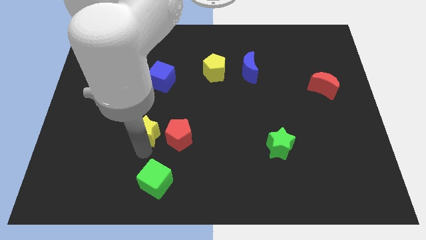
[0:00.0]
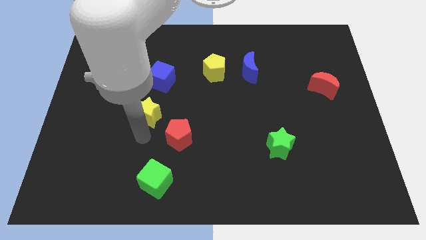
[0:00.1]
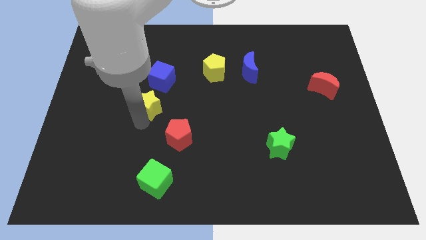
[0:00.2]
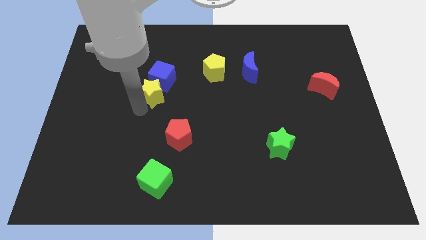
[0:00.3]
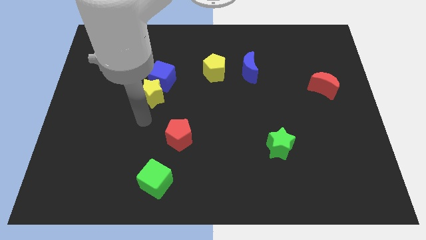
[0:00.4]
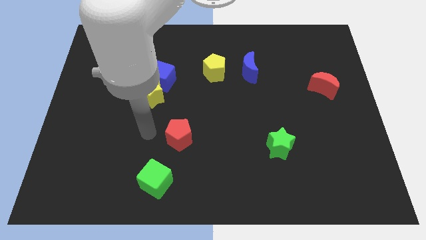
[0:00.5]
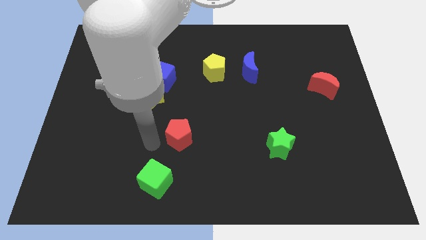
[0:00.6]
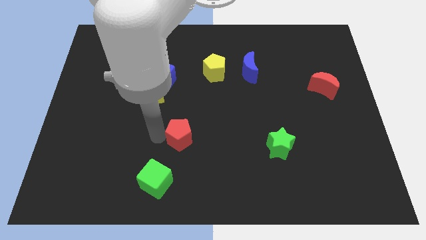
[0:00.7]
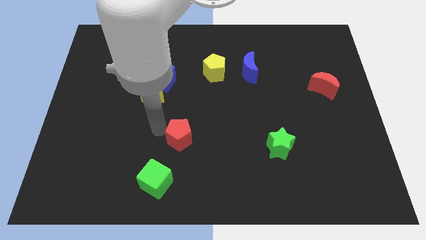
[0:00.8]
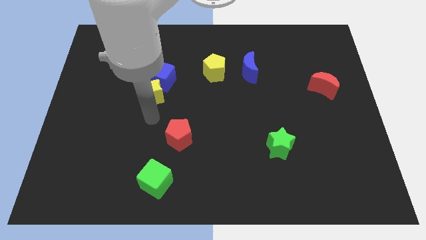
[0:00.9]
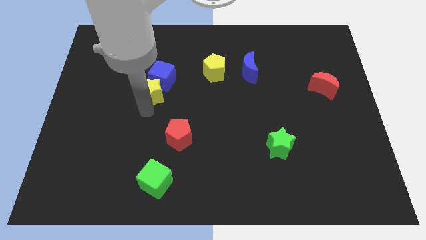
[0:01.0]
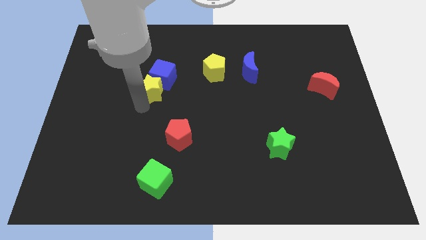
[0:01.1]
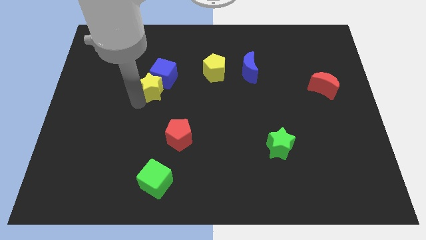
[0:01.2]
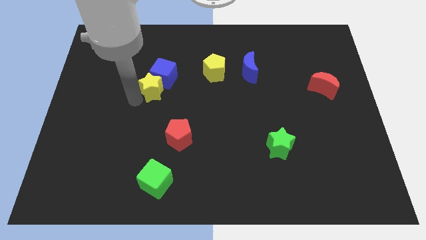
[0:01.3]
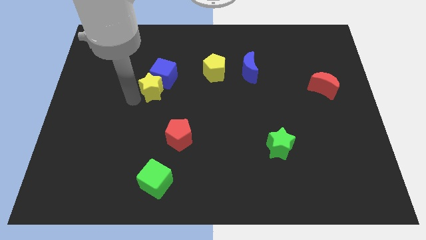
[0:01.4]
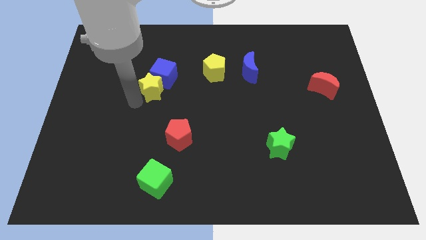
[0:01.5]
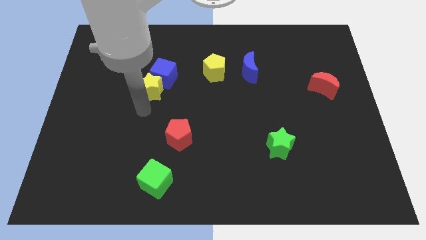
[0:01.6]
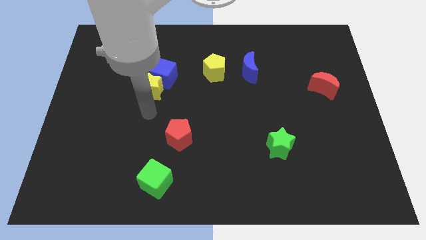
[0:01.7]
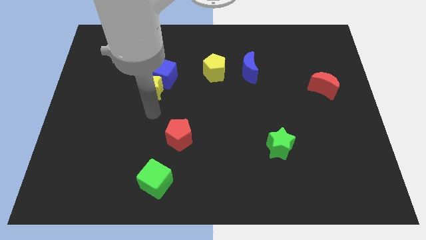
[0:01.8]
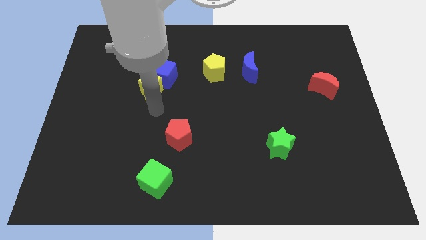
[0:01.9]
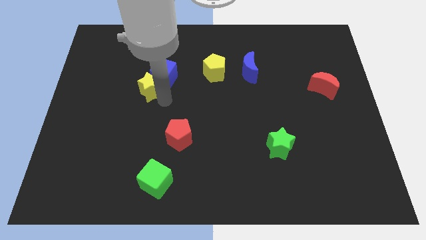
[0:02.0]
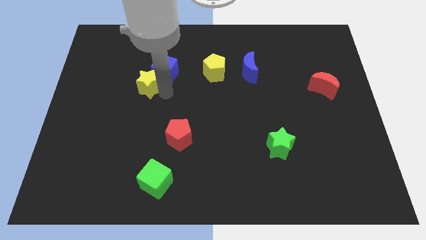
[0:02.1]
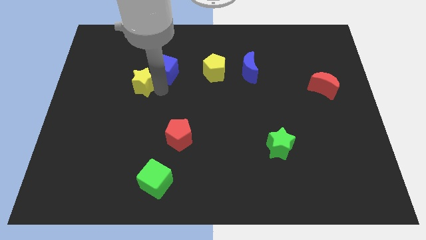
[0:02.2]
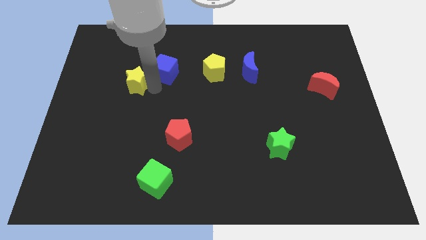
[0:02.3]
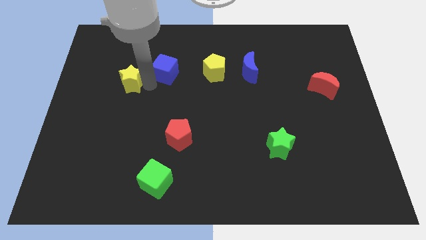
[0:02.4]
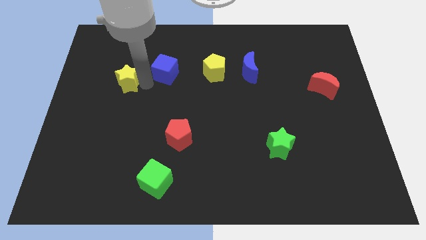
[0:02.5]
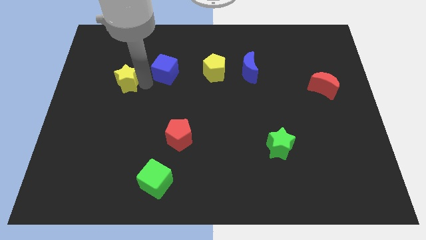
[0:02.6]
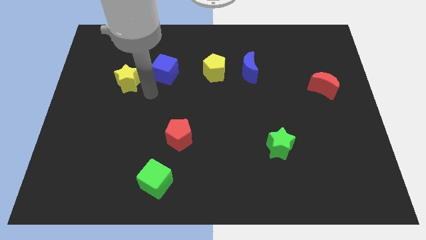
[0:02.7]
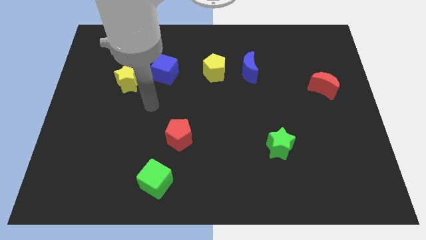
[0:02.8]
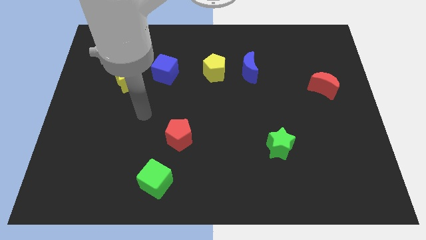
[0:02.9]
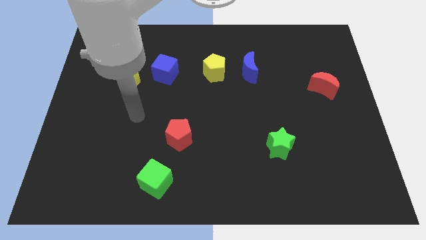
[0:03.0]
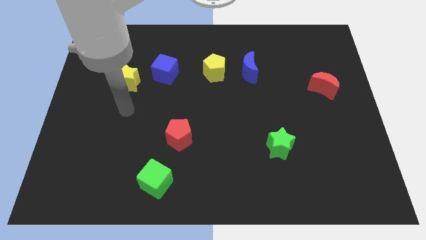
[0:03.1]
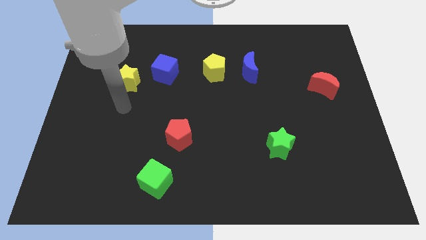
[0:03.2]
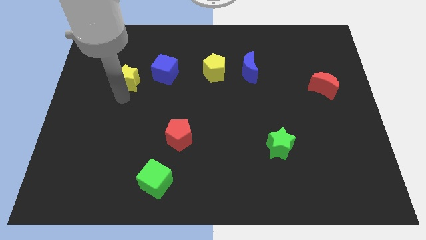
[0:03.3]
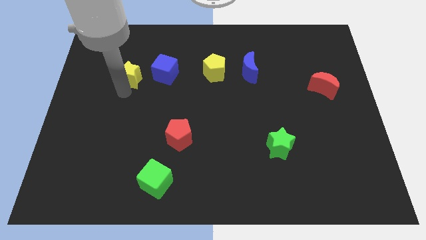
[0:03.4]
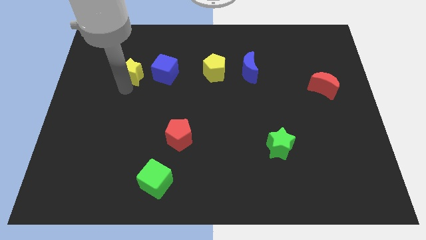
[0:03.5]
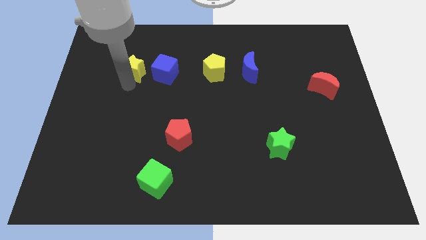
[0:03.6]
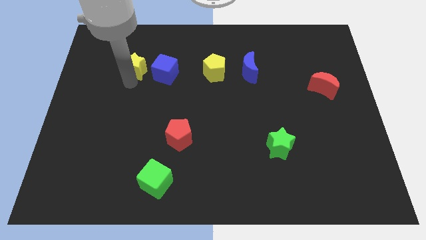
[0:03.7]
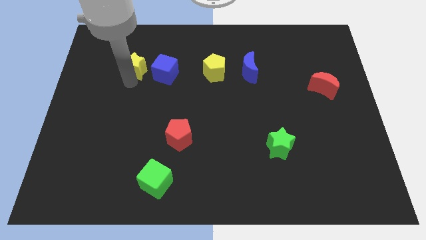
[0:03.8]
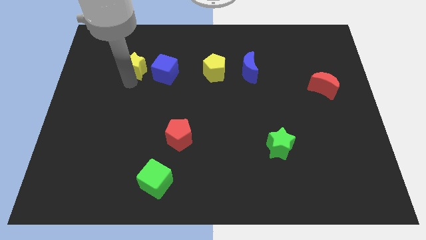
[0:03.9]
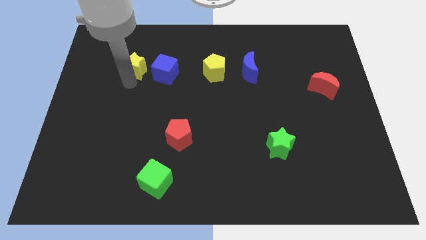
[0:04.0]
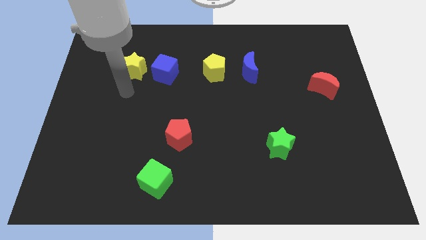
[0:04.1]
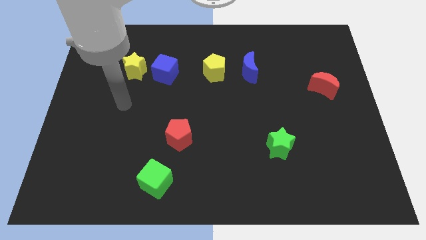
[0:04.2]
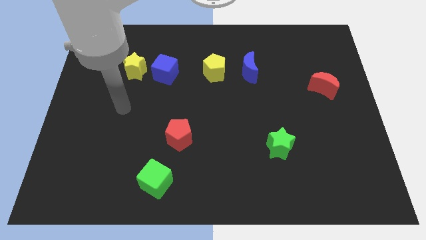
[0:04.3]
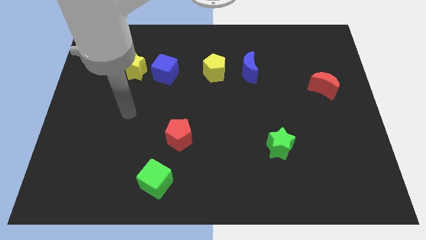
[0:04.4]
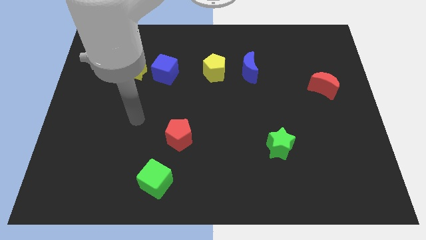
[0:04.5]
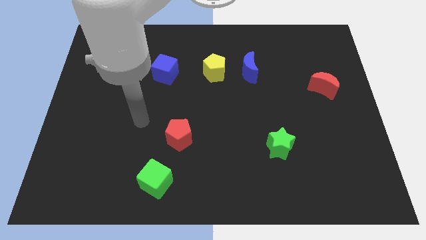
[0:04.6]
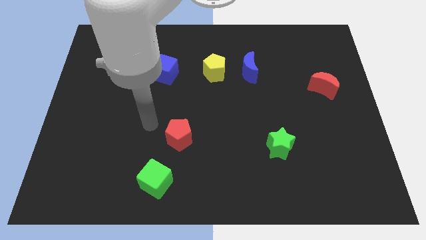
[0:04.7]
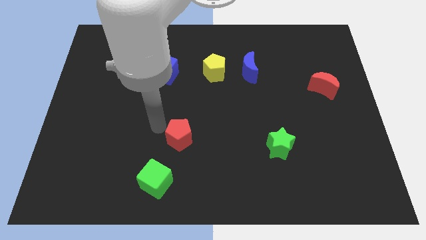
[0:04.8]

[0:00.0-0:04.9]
move the yellow star to the left of the blue cube

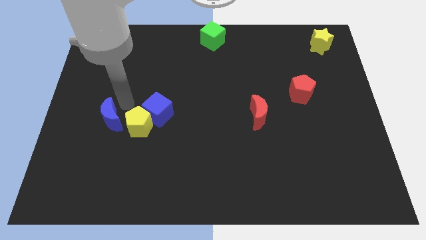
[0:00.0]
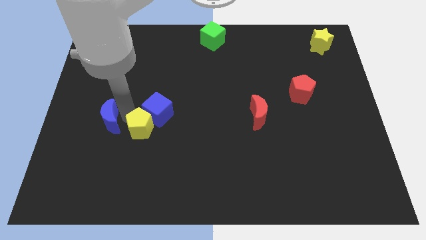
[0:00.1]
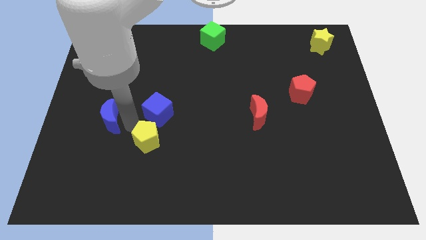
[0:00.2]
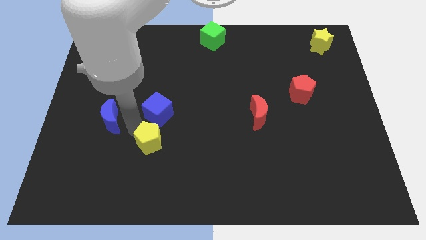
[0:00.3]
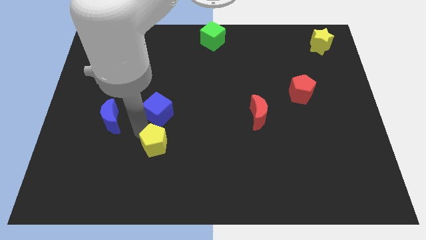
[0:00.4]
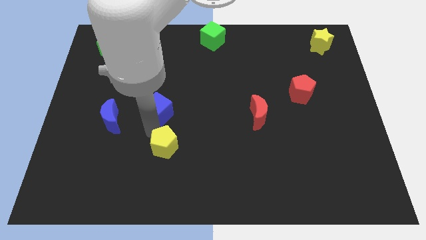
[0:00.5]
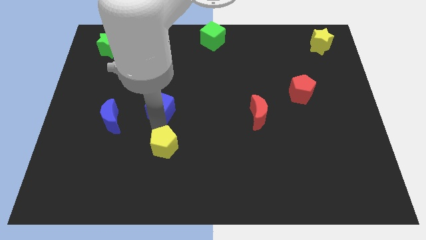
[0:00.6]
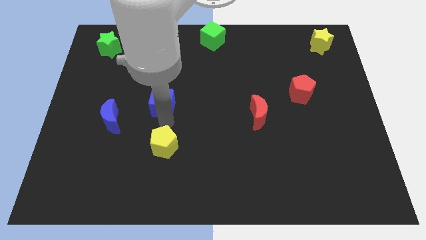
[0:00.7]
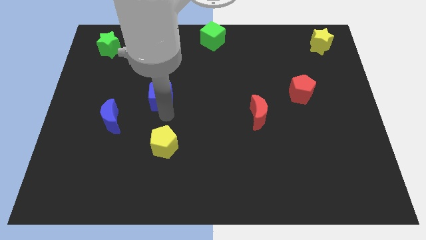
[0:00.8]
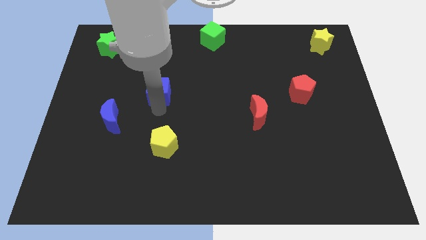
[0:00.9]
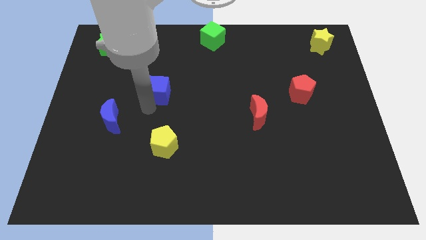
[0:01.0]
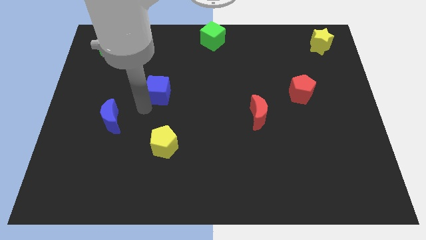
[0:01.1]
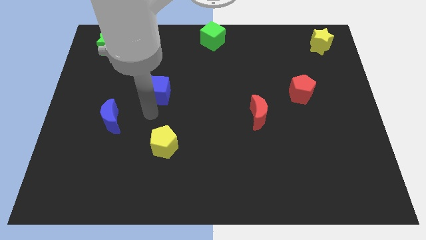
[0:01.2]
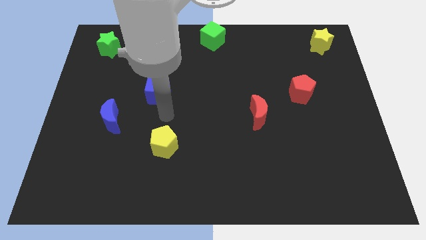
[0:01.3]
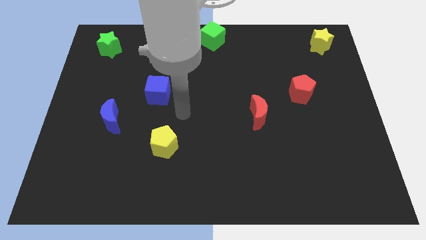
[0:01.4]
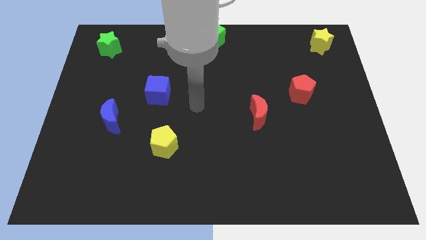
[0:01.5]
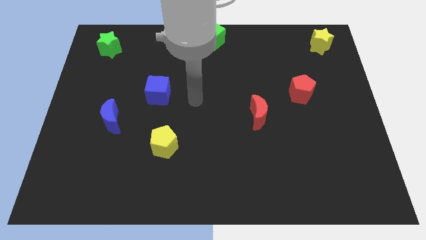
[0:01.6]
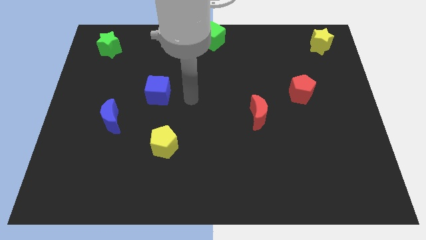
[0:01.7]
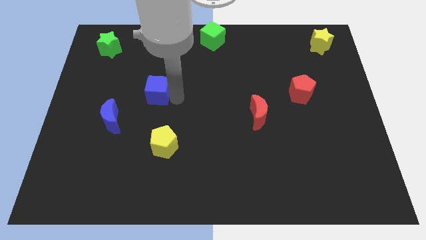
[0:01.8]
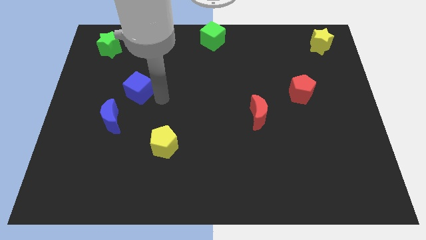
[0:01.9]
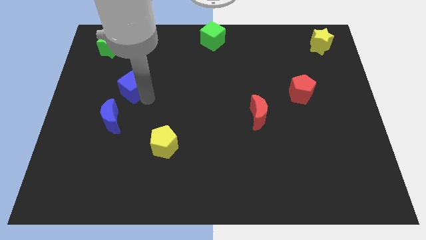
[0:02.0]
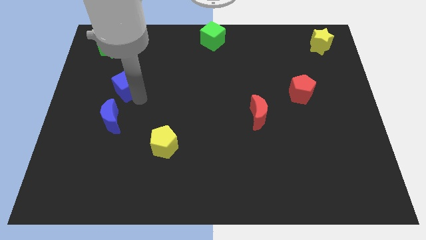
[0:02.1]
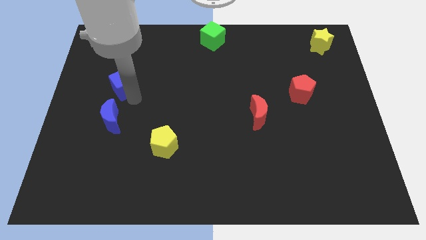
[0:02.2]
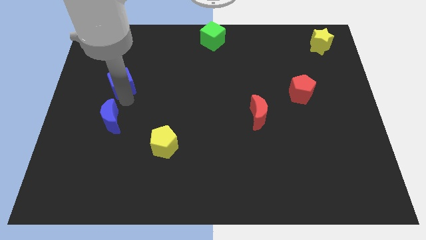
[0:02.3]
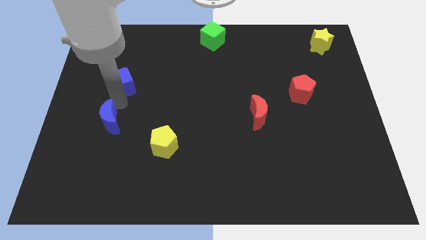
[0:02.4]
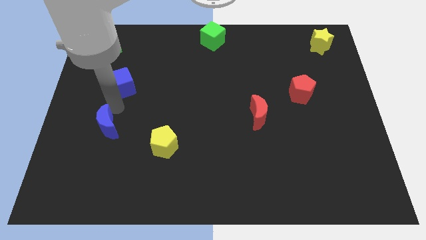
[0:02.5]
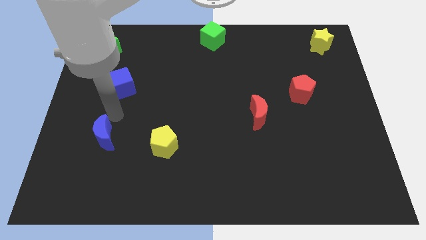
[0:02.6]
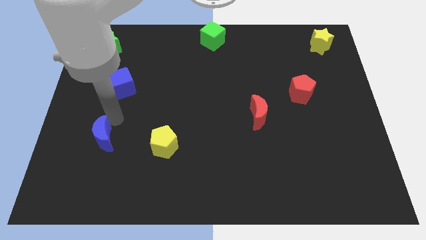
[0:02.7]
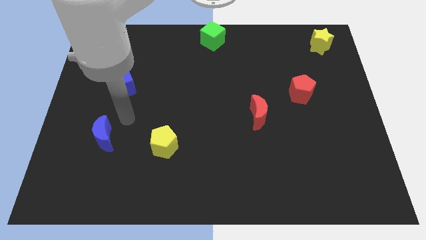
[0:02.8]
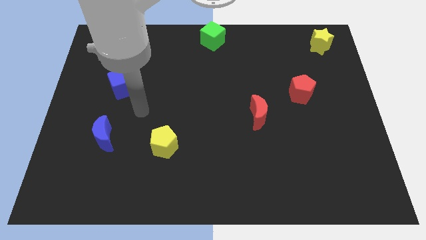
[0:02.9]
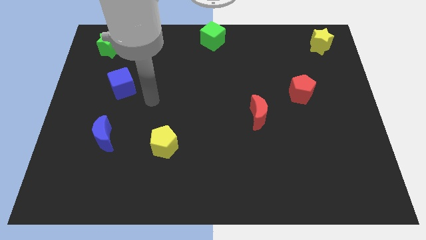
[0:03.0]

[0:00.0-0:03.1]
separate blue blocks and yellow pentagon from each other

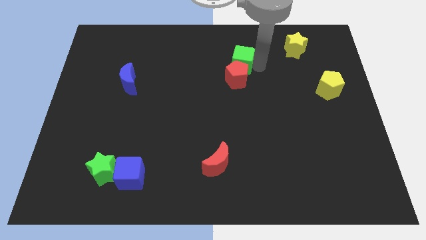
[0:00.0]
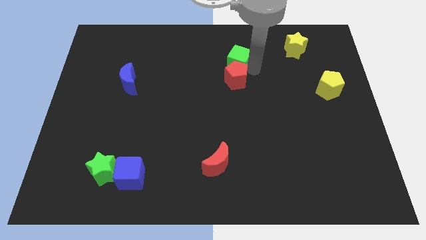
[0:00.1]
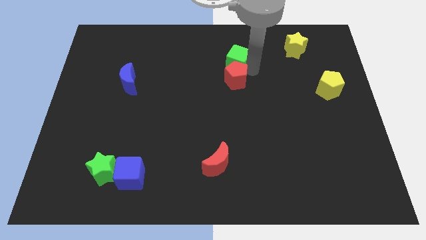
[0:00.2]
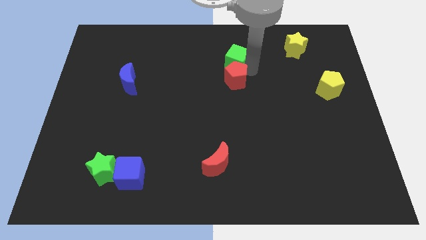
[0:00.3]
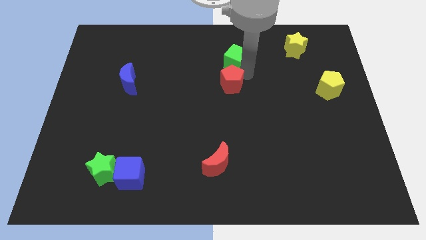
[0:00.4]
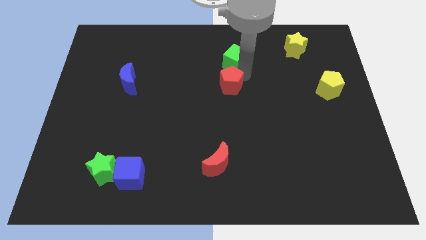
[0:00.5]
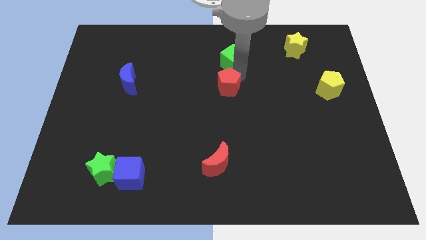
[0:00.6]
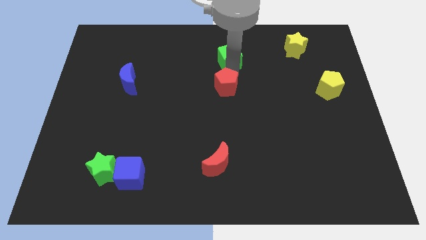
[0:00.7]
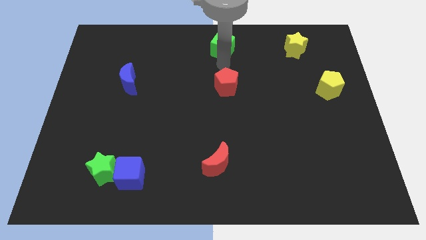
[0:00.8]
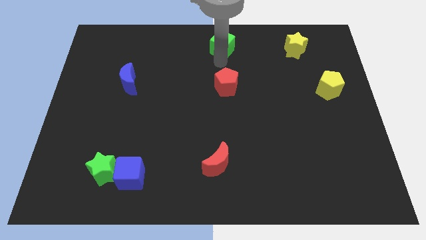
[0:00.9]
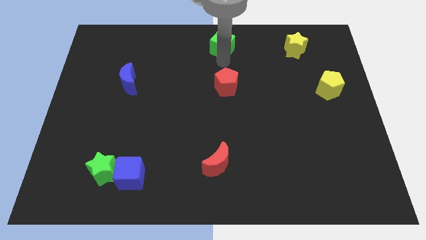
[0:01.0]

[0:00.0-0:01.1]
separate the green cube from the red pentagon

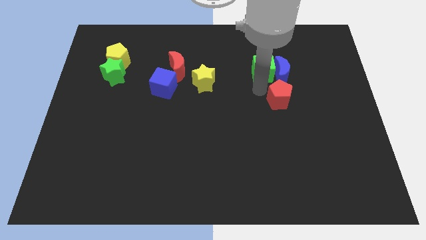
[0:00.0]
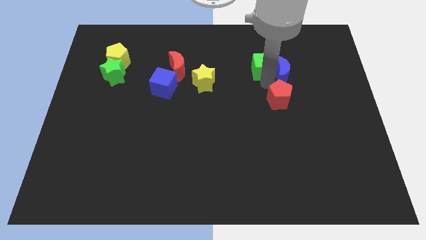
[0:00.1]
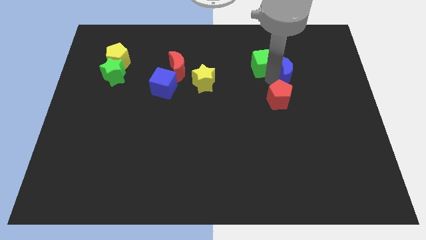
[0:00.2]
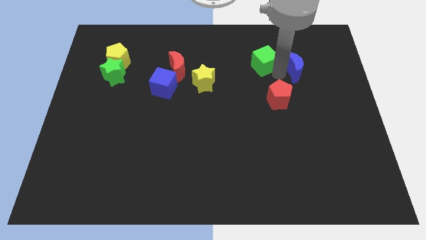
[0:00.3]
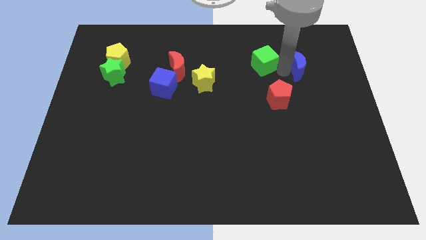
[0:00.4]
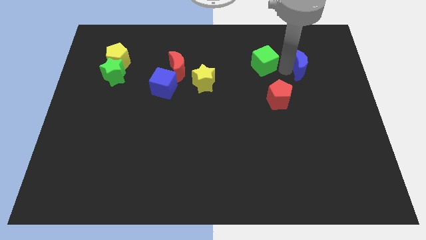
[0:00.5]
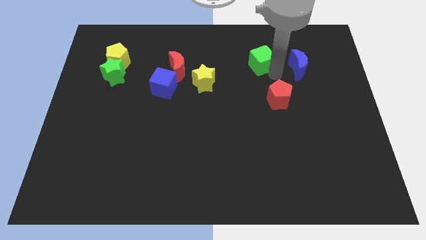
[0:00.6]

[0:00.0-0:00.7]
push the green and blue block above the red pentagon
